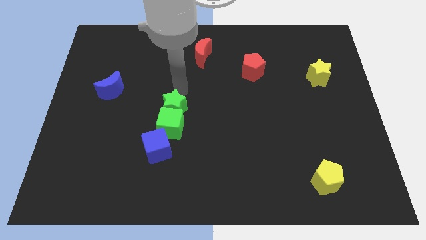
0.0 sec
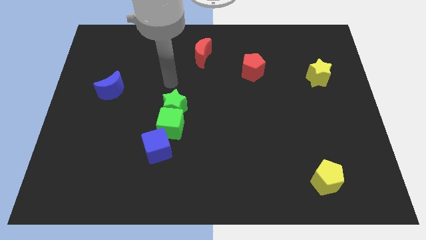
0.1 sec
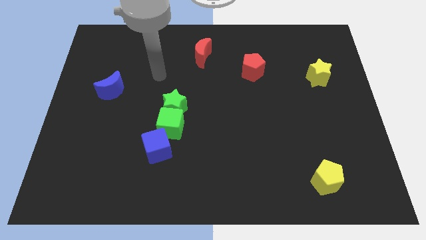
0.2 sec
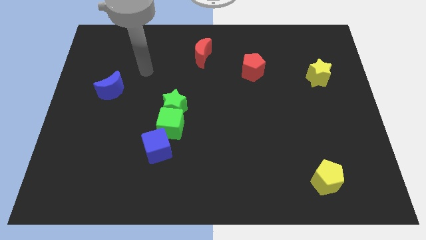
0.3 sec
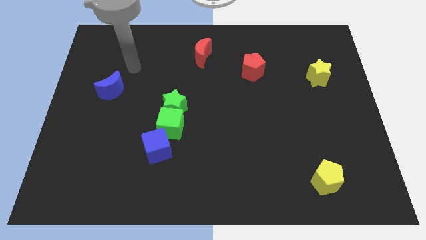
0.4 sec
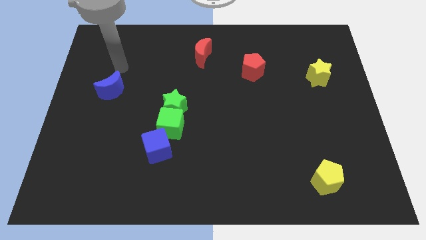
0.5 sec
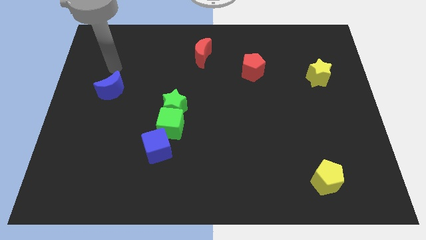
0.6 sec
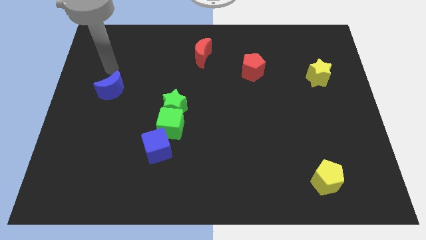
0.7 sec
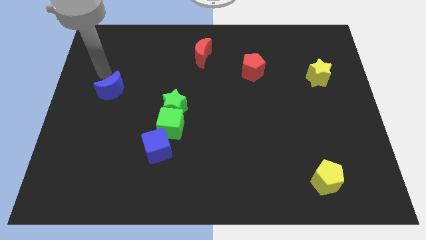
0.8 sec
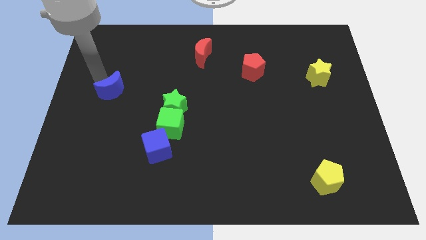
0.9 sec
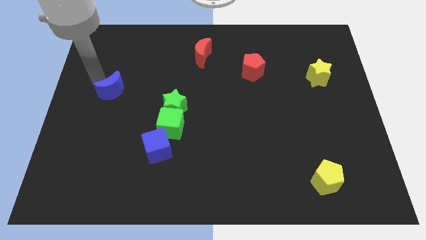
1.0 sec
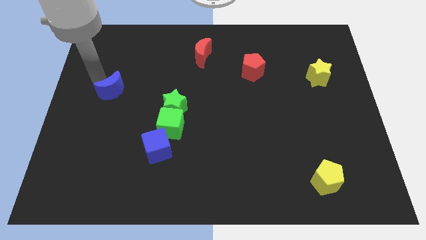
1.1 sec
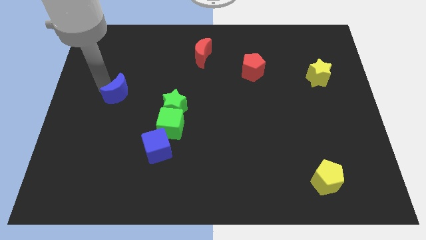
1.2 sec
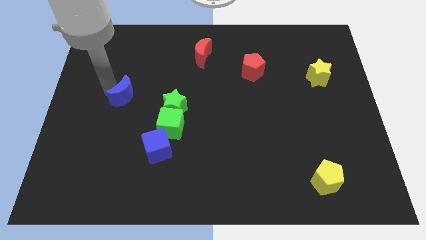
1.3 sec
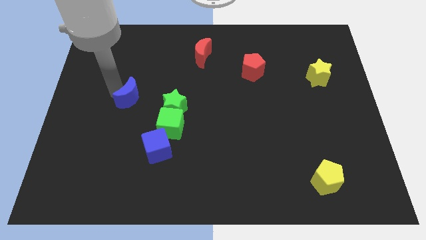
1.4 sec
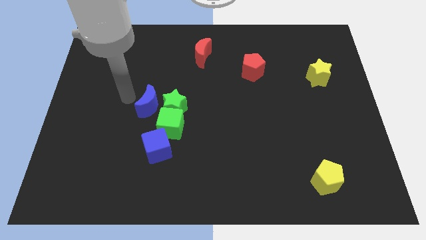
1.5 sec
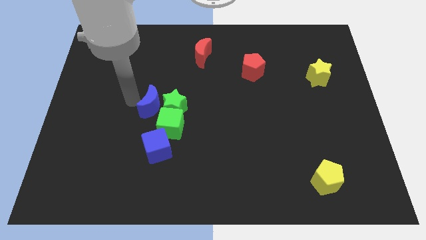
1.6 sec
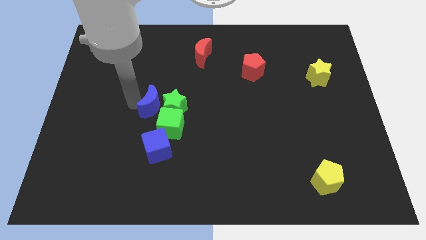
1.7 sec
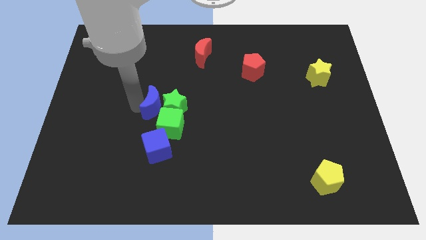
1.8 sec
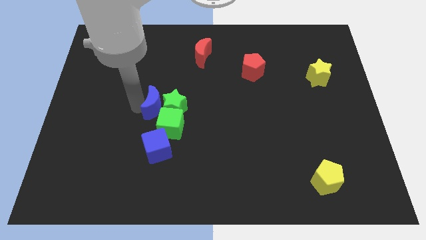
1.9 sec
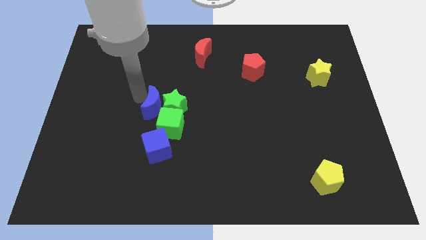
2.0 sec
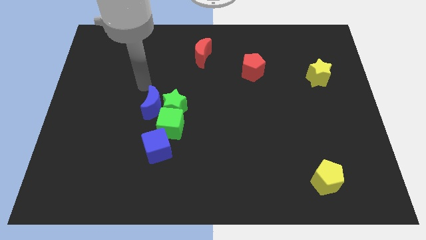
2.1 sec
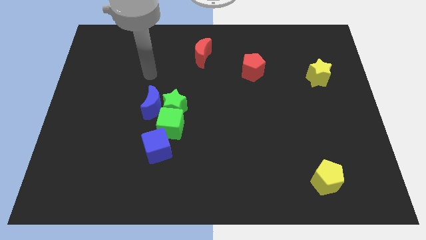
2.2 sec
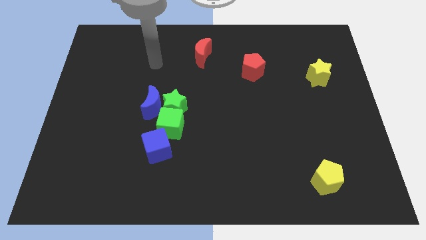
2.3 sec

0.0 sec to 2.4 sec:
push the blue cube towards the green blocks

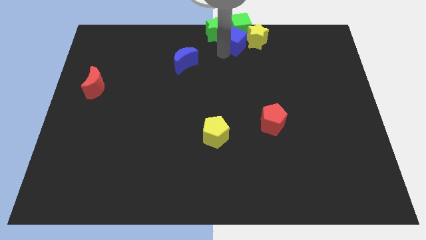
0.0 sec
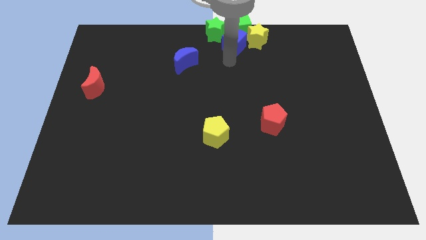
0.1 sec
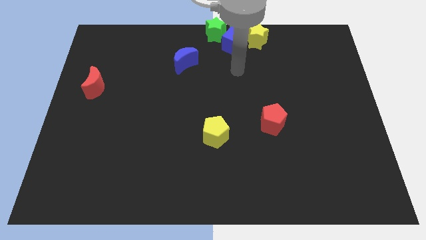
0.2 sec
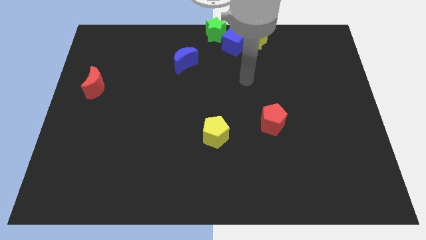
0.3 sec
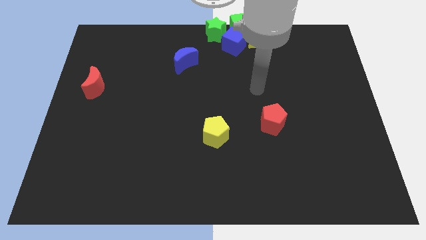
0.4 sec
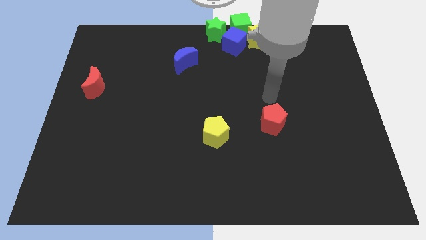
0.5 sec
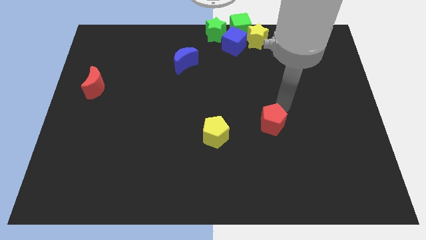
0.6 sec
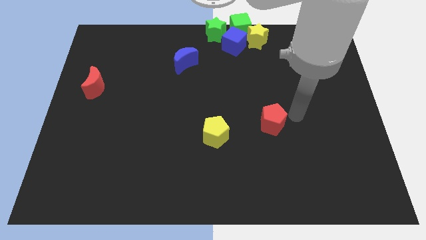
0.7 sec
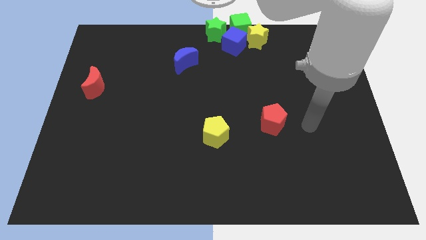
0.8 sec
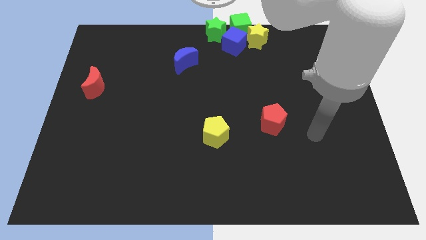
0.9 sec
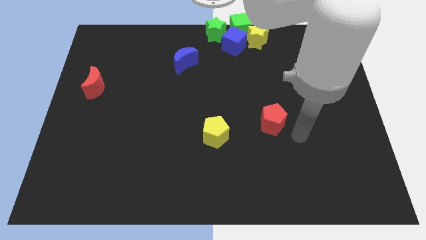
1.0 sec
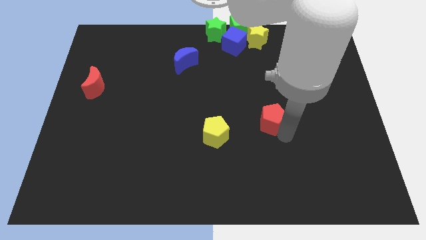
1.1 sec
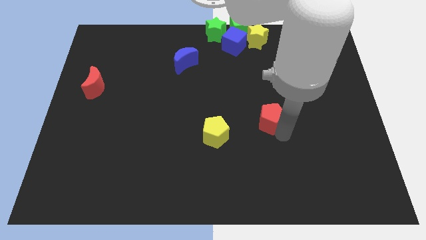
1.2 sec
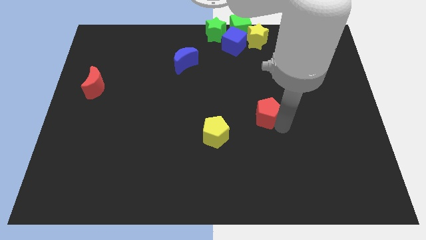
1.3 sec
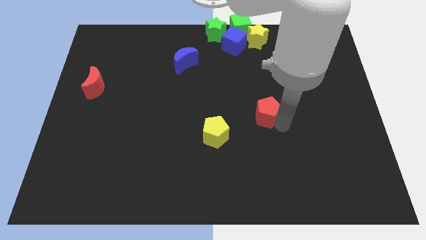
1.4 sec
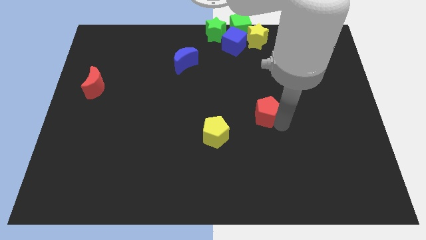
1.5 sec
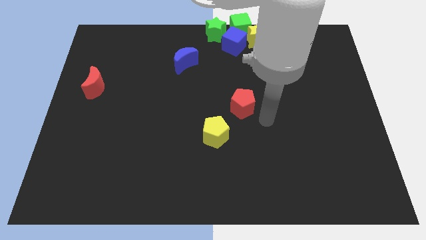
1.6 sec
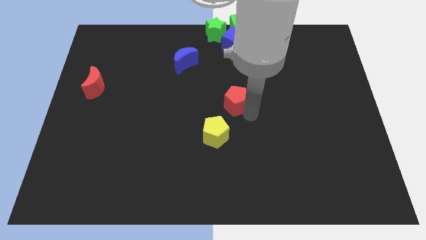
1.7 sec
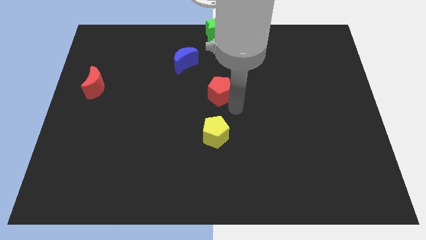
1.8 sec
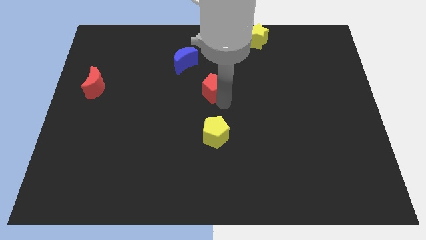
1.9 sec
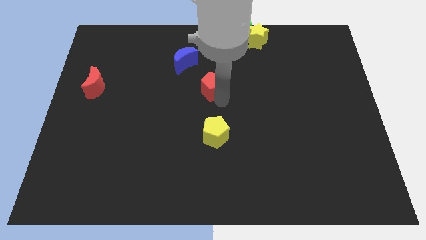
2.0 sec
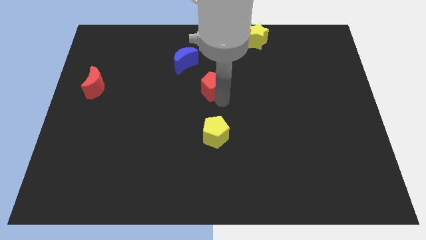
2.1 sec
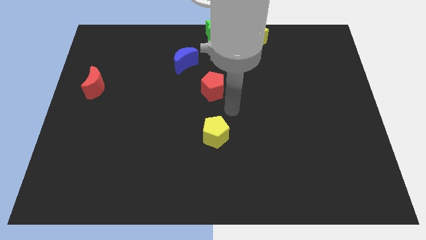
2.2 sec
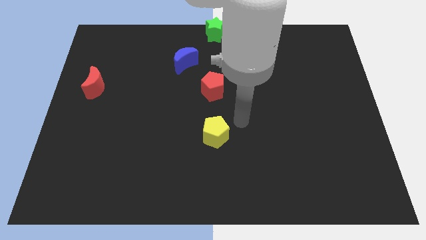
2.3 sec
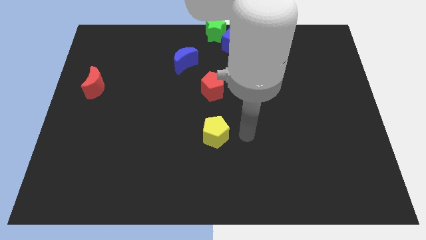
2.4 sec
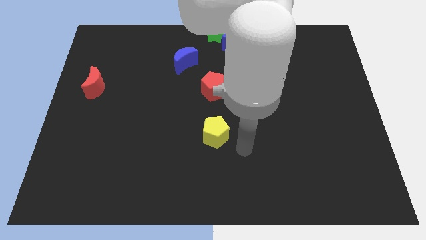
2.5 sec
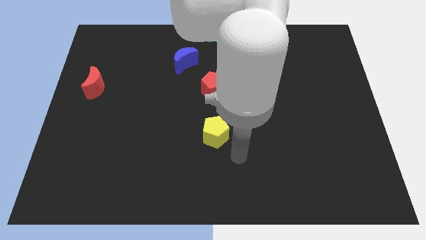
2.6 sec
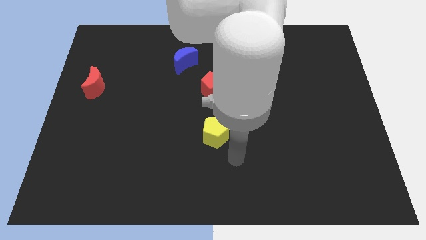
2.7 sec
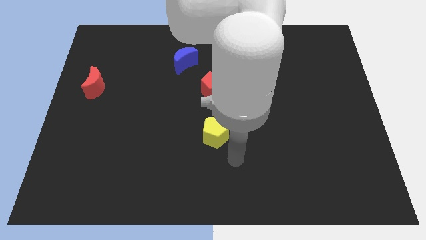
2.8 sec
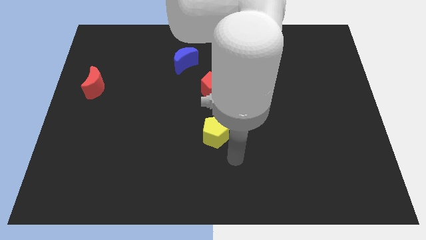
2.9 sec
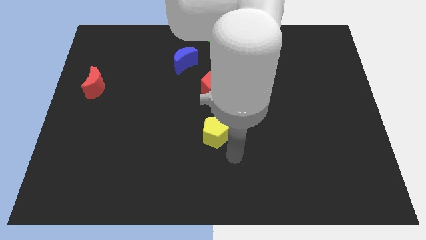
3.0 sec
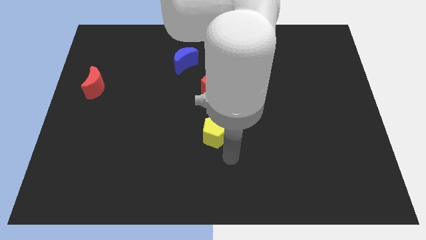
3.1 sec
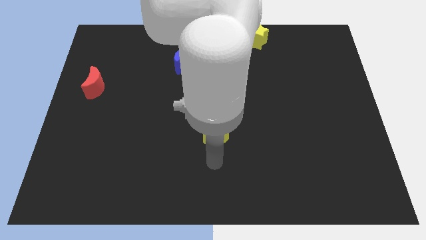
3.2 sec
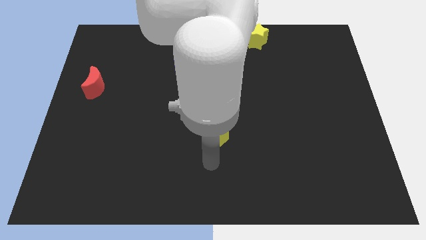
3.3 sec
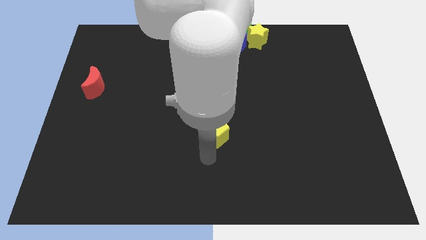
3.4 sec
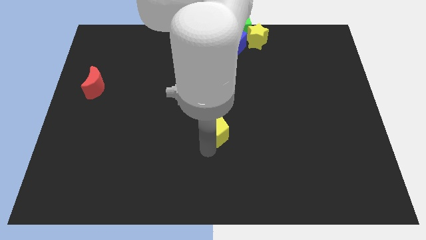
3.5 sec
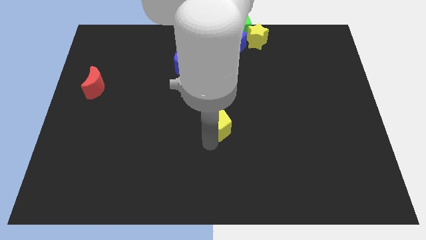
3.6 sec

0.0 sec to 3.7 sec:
push the red pentagon to the center of the board

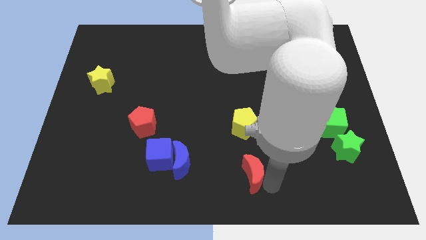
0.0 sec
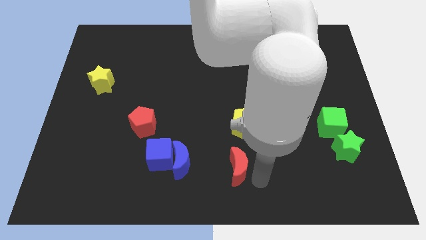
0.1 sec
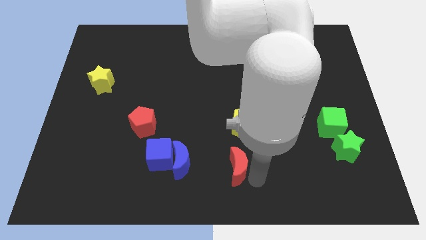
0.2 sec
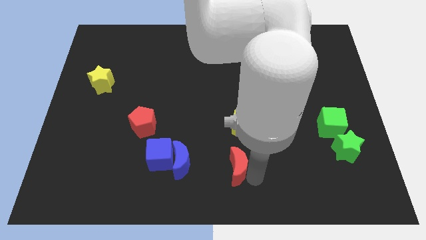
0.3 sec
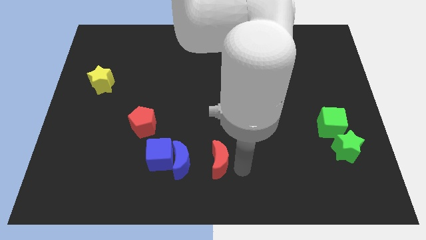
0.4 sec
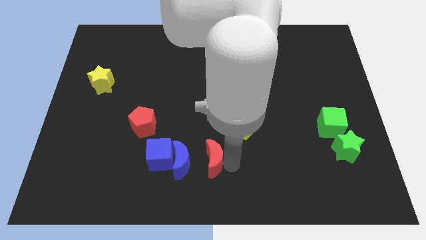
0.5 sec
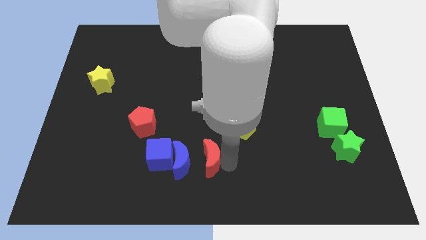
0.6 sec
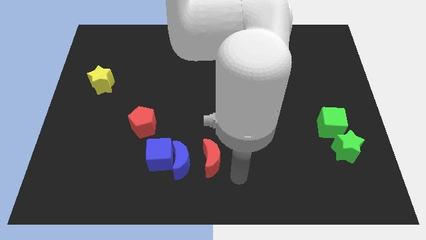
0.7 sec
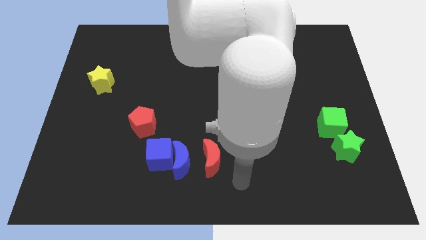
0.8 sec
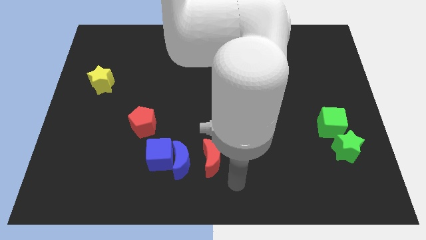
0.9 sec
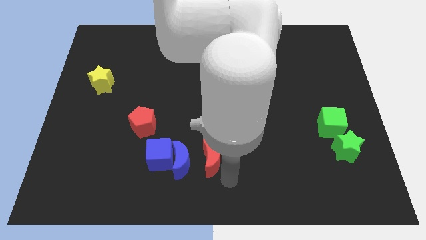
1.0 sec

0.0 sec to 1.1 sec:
move red crescent towards blue crescent

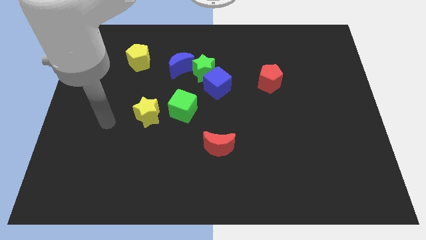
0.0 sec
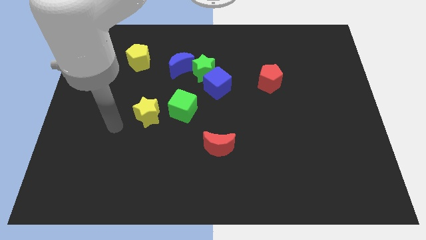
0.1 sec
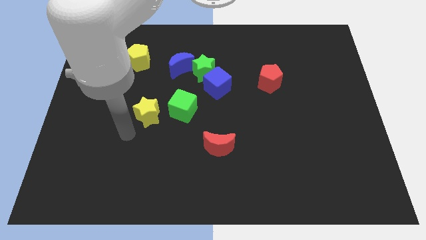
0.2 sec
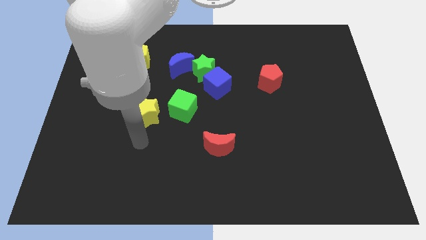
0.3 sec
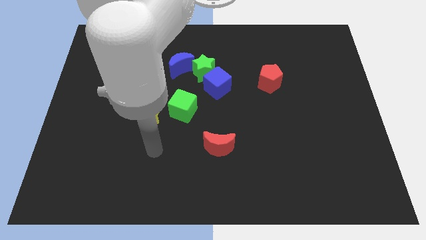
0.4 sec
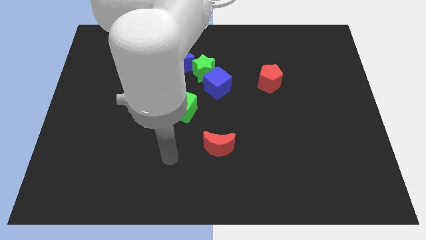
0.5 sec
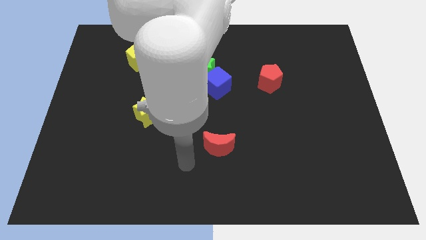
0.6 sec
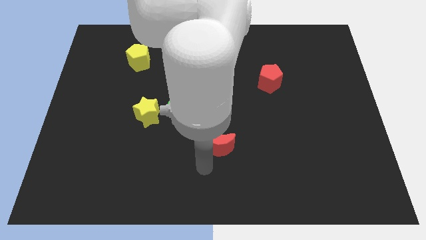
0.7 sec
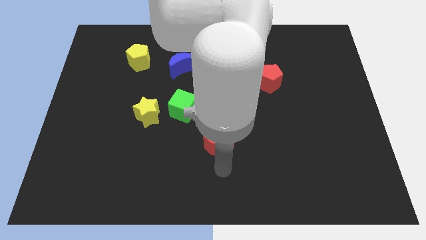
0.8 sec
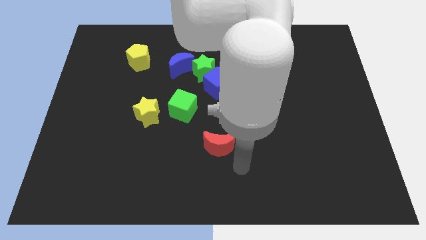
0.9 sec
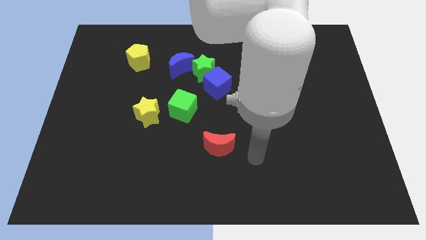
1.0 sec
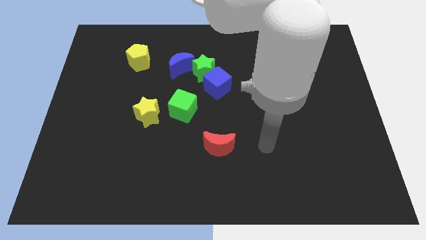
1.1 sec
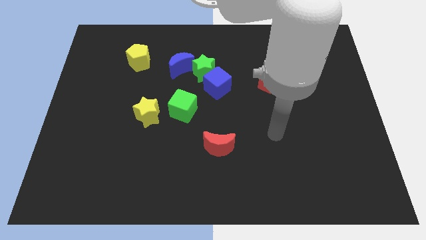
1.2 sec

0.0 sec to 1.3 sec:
put your hand right to the red pentagon

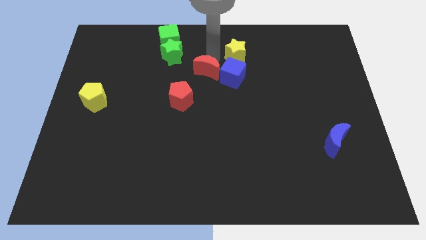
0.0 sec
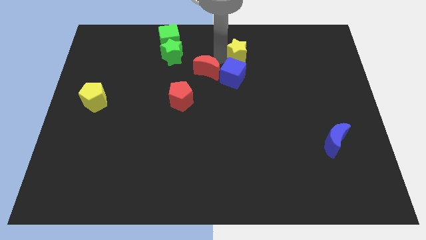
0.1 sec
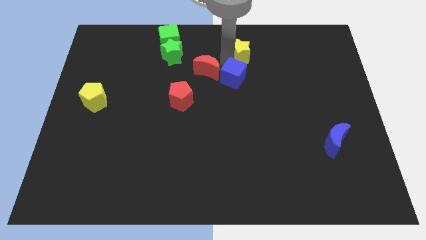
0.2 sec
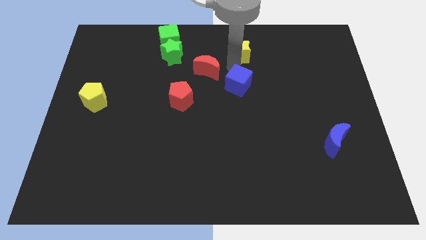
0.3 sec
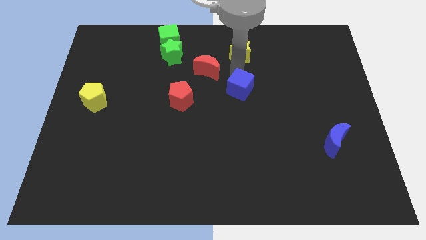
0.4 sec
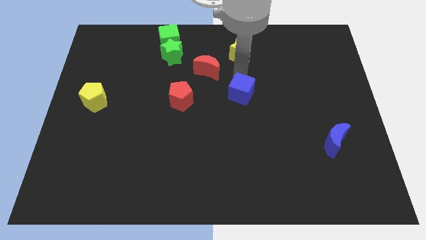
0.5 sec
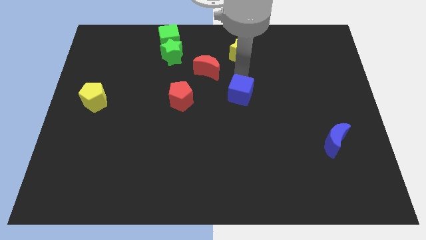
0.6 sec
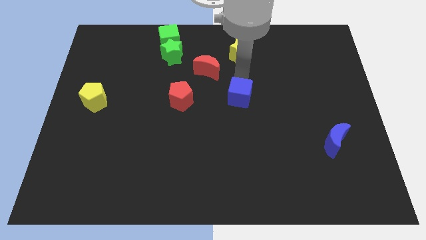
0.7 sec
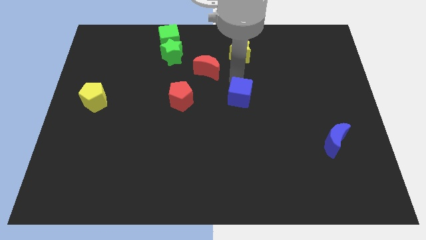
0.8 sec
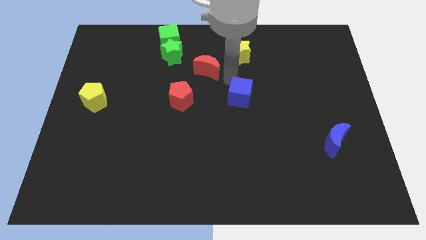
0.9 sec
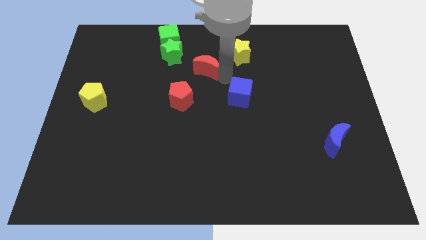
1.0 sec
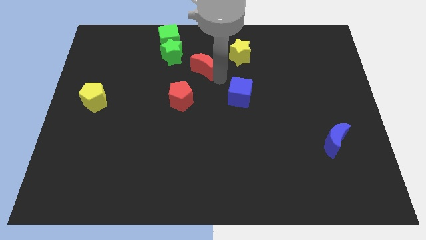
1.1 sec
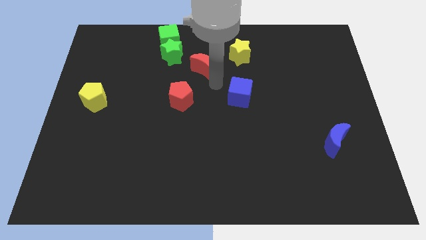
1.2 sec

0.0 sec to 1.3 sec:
slightly push the blue cube towards the bottom of the yellow star
